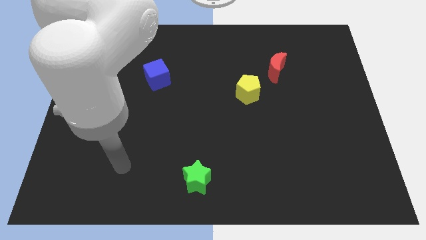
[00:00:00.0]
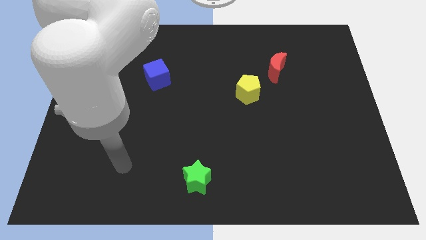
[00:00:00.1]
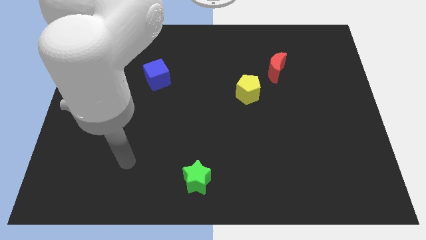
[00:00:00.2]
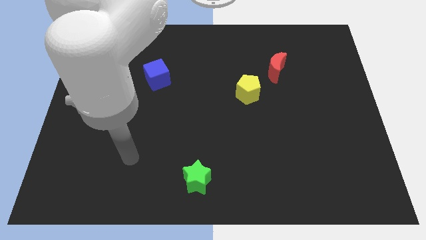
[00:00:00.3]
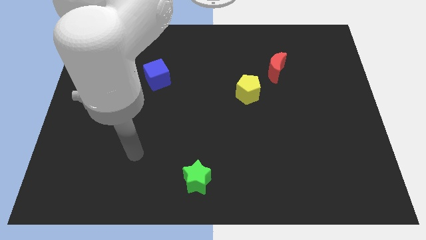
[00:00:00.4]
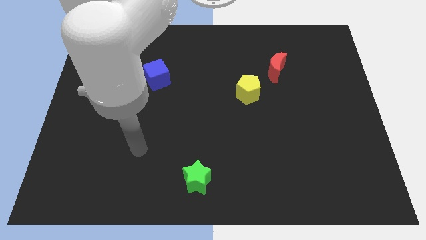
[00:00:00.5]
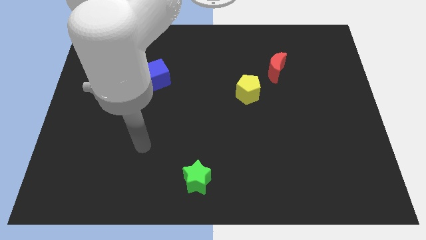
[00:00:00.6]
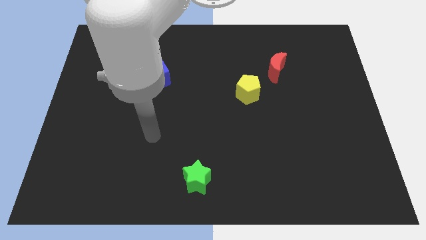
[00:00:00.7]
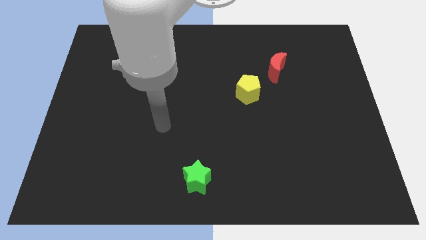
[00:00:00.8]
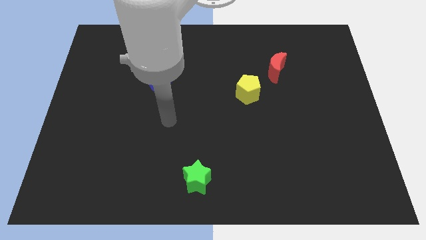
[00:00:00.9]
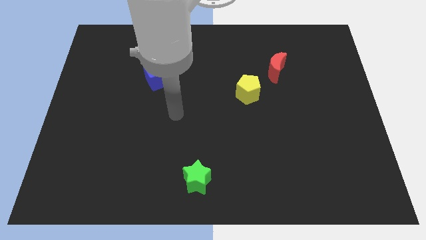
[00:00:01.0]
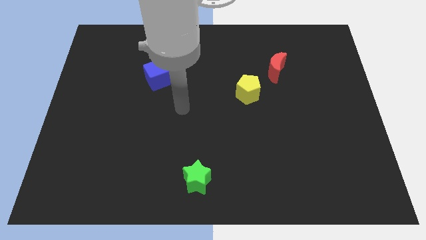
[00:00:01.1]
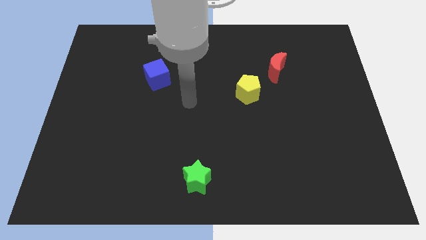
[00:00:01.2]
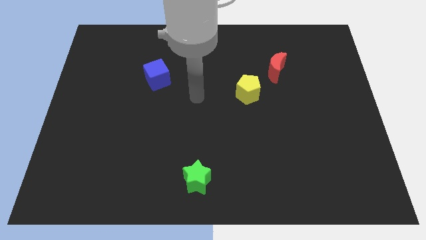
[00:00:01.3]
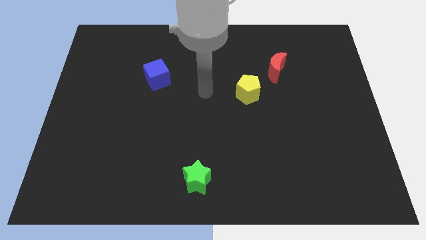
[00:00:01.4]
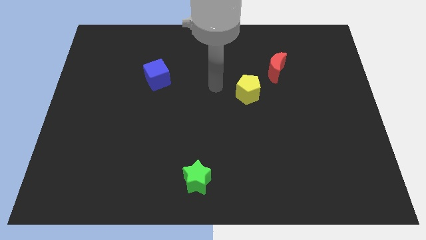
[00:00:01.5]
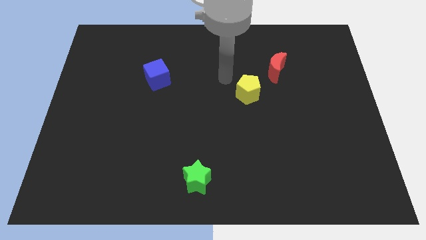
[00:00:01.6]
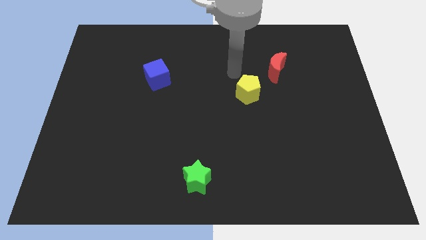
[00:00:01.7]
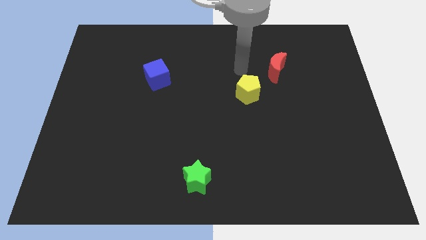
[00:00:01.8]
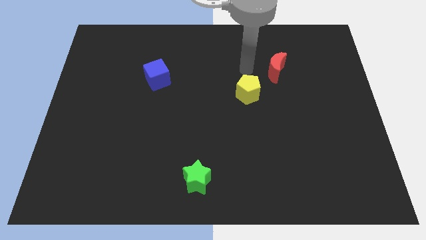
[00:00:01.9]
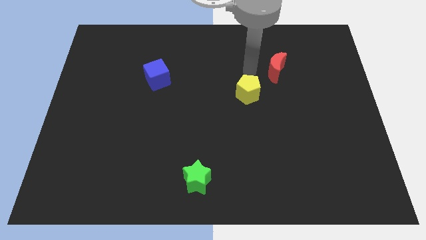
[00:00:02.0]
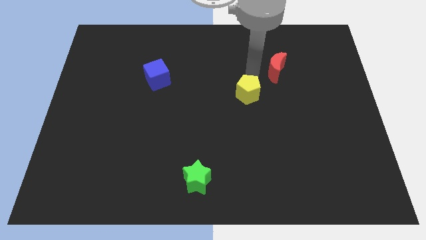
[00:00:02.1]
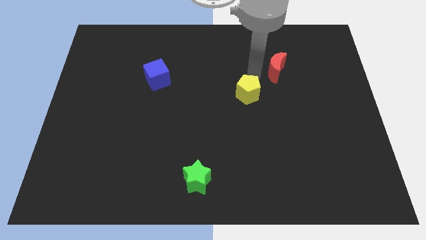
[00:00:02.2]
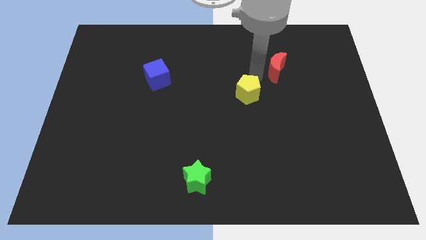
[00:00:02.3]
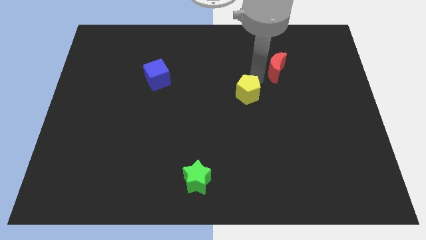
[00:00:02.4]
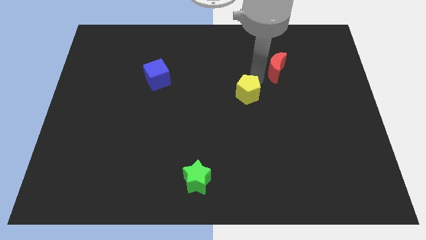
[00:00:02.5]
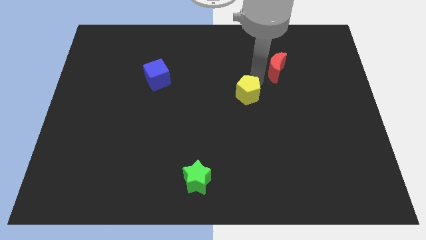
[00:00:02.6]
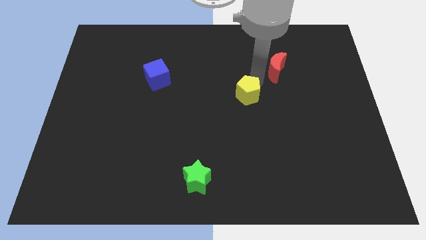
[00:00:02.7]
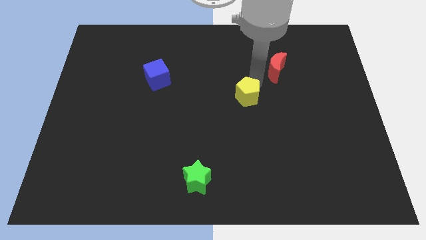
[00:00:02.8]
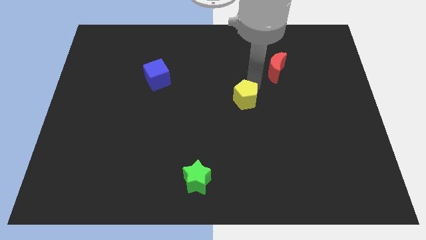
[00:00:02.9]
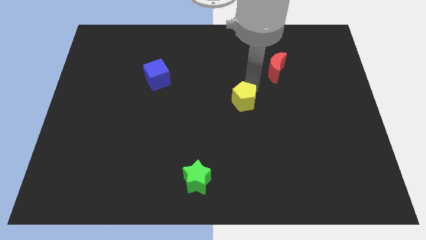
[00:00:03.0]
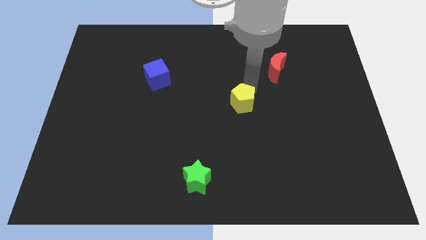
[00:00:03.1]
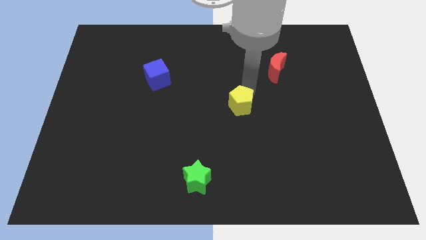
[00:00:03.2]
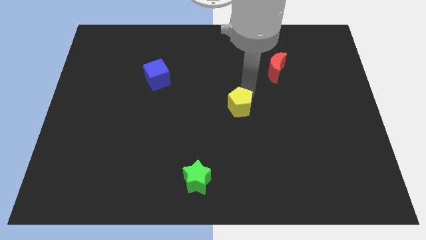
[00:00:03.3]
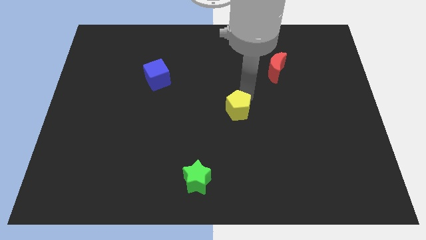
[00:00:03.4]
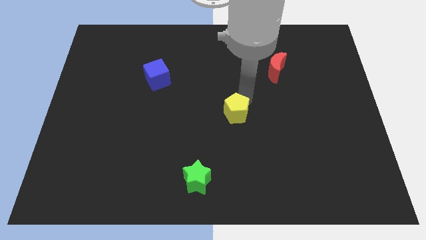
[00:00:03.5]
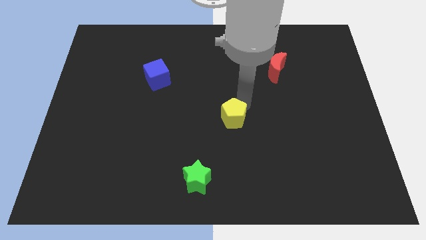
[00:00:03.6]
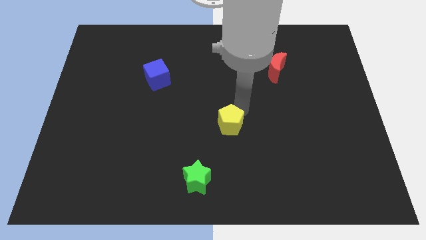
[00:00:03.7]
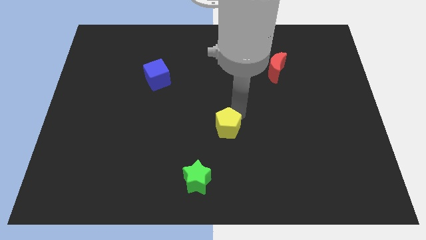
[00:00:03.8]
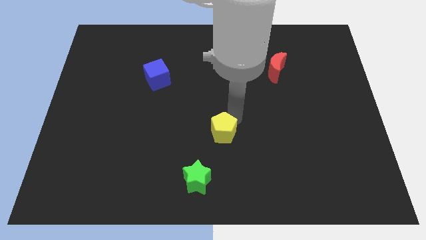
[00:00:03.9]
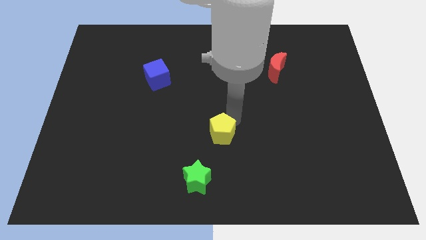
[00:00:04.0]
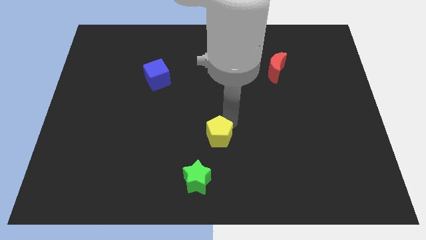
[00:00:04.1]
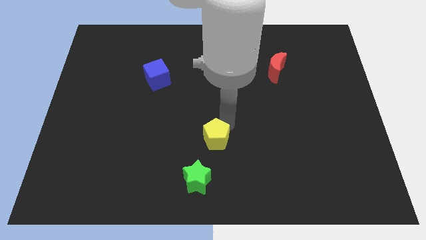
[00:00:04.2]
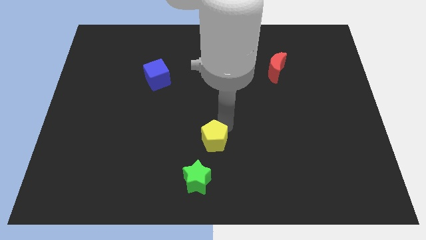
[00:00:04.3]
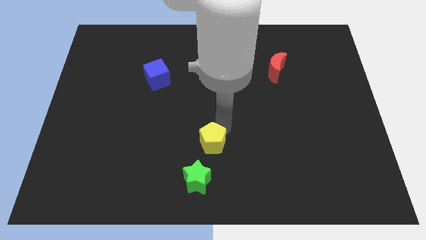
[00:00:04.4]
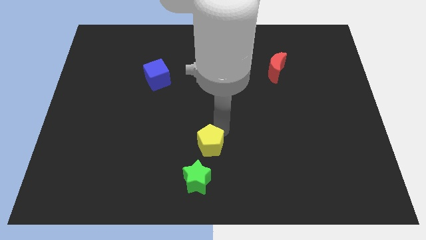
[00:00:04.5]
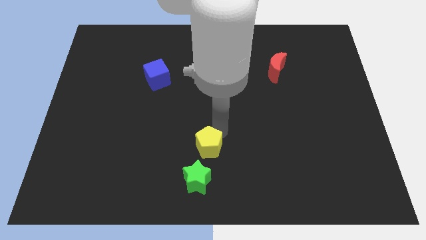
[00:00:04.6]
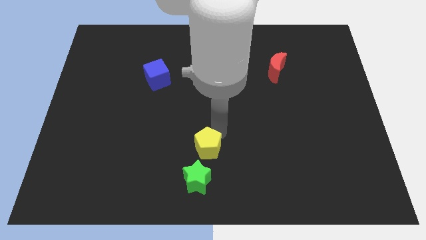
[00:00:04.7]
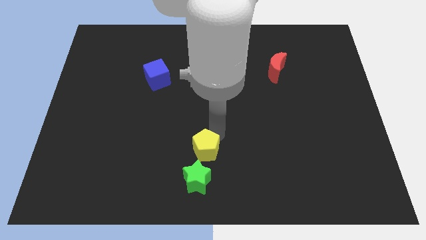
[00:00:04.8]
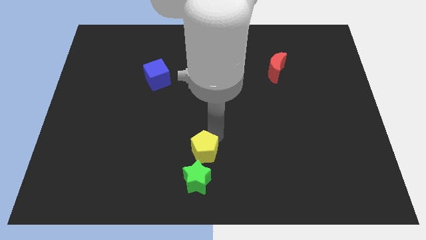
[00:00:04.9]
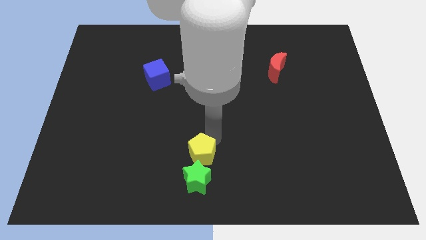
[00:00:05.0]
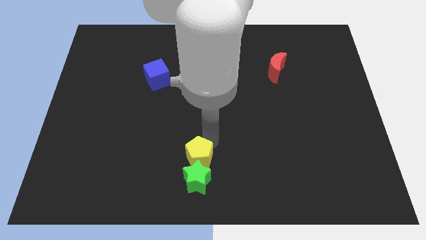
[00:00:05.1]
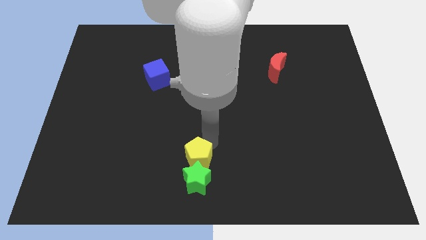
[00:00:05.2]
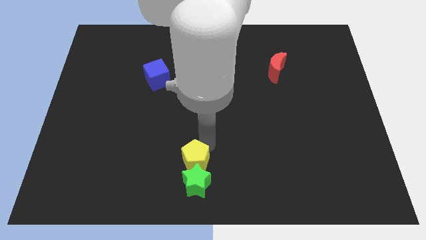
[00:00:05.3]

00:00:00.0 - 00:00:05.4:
slide the pentagon close to the green block

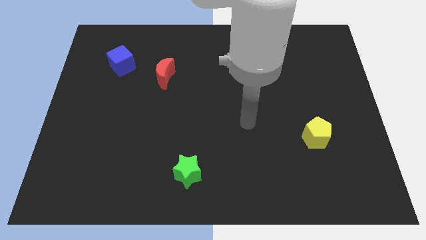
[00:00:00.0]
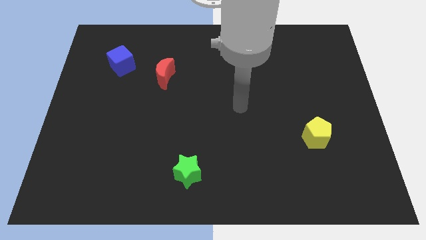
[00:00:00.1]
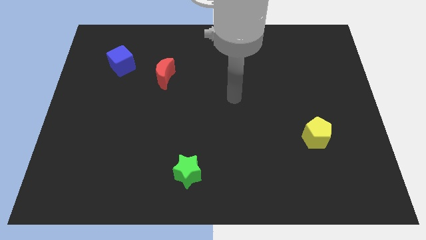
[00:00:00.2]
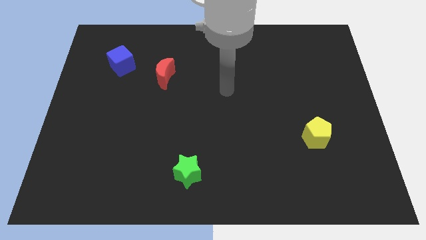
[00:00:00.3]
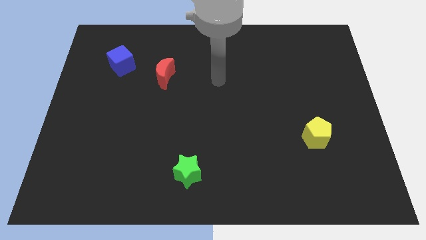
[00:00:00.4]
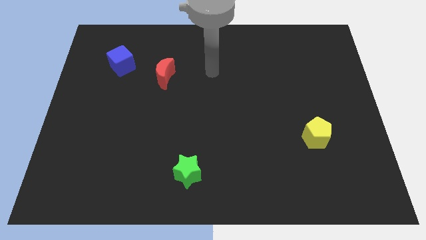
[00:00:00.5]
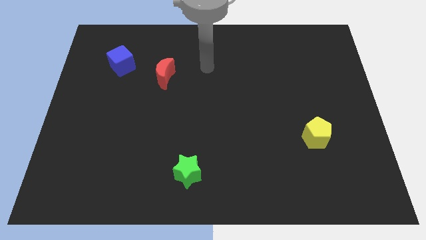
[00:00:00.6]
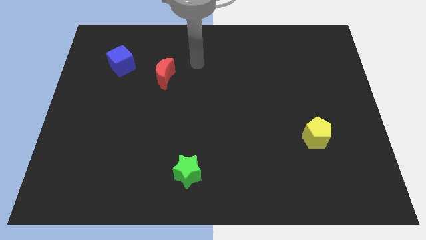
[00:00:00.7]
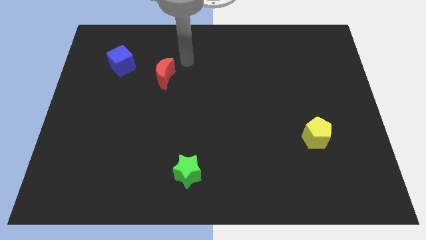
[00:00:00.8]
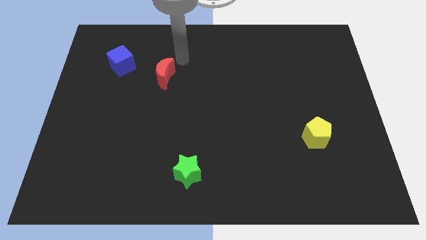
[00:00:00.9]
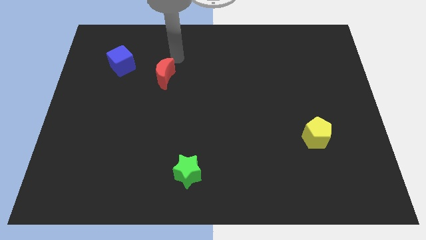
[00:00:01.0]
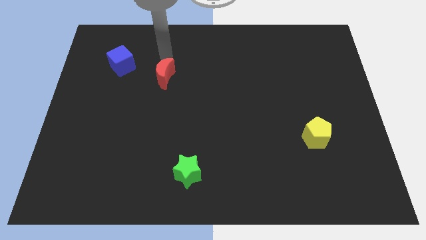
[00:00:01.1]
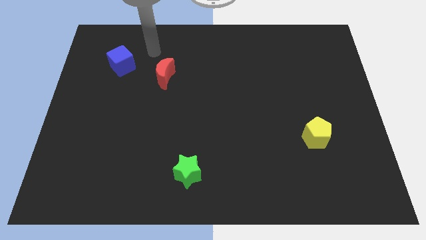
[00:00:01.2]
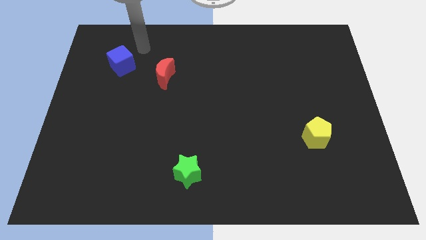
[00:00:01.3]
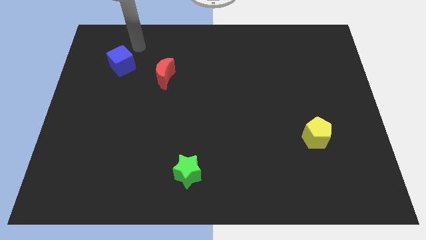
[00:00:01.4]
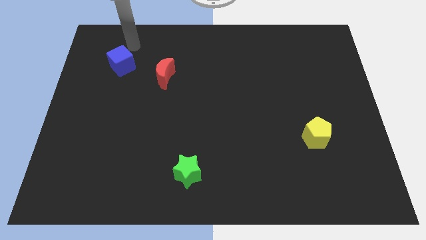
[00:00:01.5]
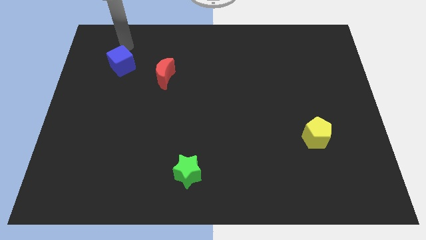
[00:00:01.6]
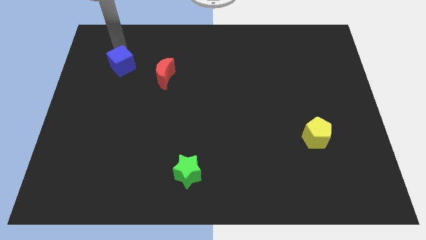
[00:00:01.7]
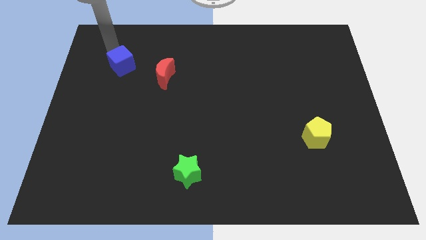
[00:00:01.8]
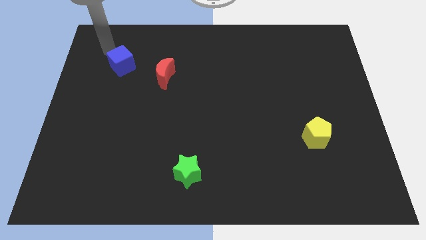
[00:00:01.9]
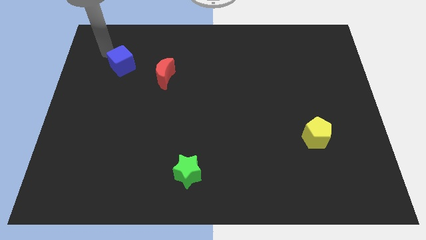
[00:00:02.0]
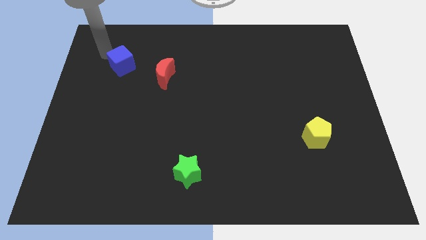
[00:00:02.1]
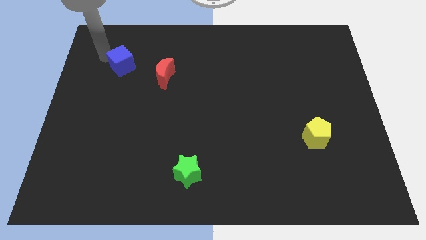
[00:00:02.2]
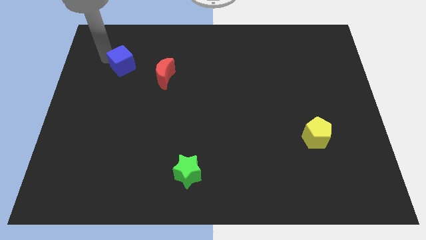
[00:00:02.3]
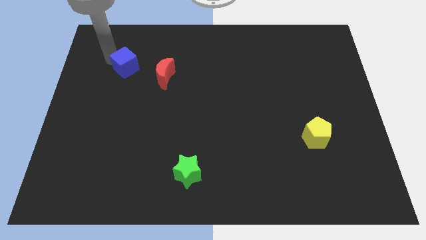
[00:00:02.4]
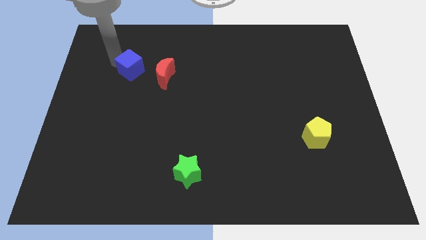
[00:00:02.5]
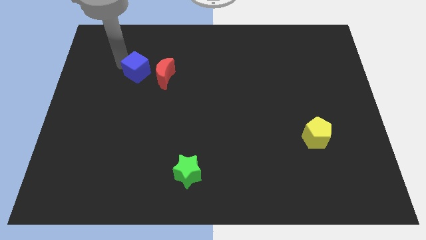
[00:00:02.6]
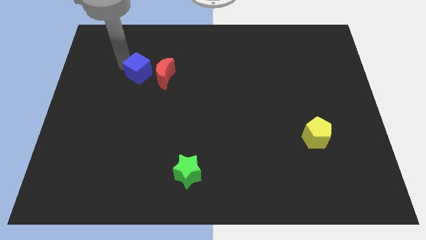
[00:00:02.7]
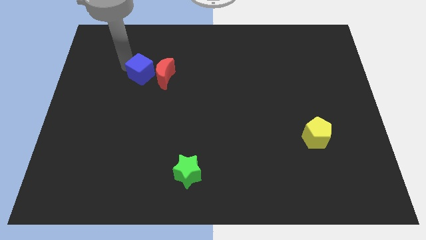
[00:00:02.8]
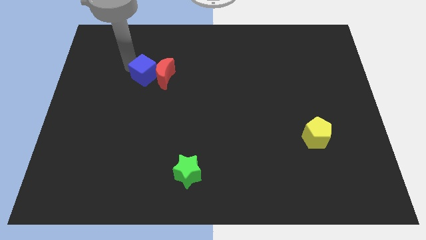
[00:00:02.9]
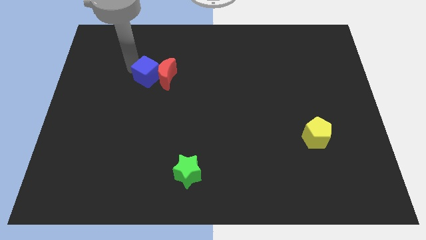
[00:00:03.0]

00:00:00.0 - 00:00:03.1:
slide the cube close to the moon
